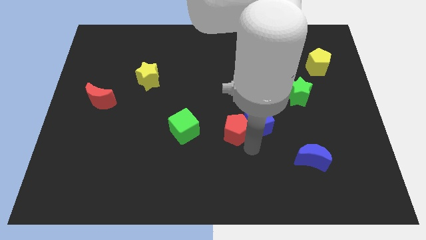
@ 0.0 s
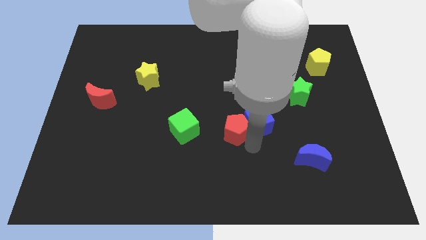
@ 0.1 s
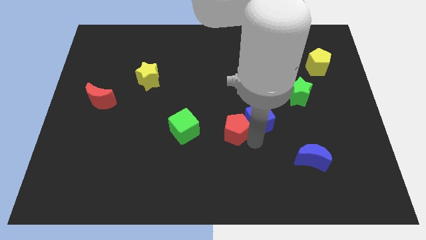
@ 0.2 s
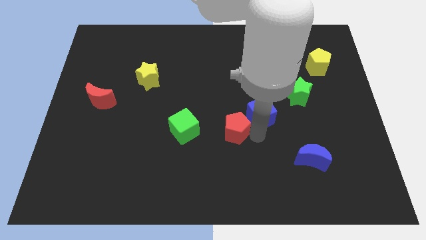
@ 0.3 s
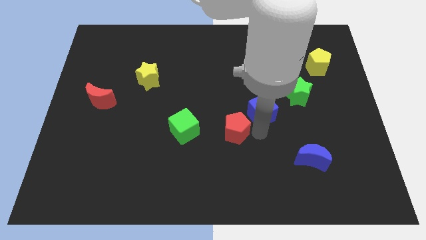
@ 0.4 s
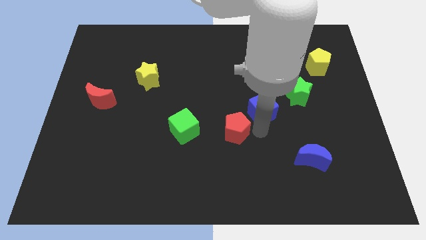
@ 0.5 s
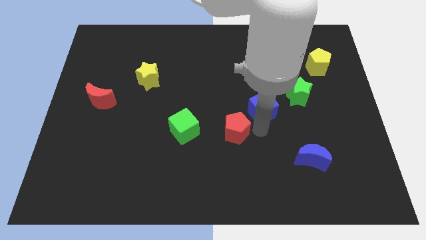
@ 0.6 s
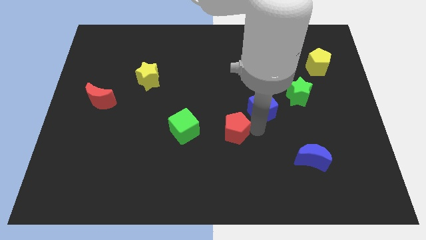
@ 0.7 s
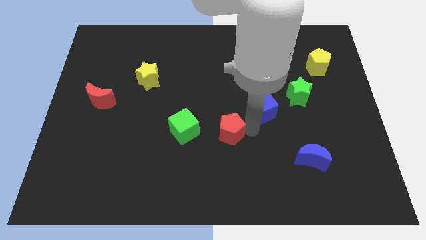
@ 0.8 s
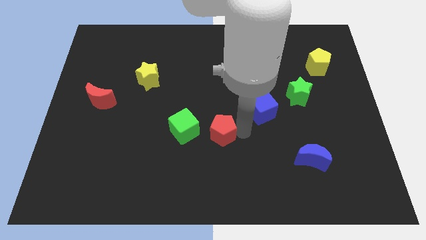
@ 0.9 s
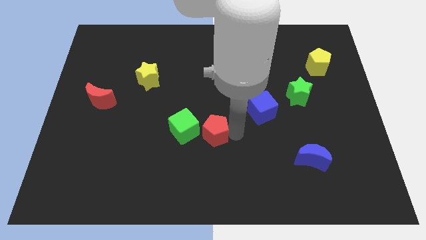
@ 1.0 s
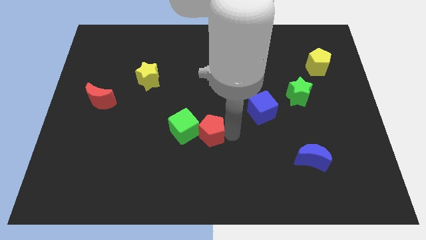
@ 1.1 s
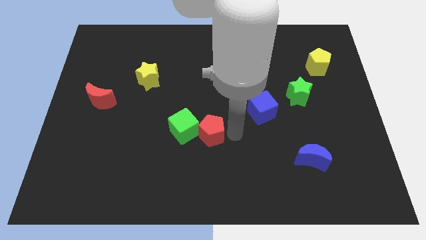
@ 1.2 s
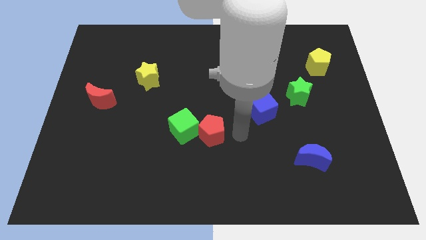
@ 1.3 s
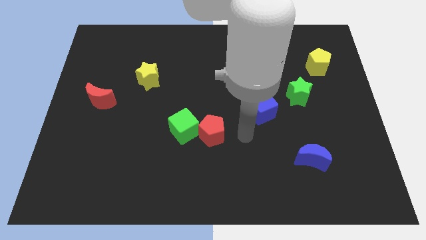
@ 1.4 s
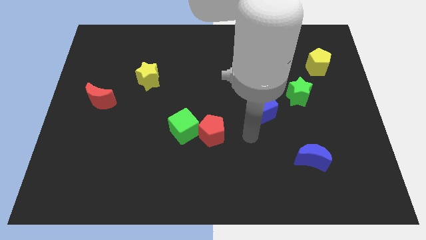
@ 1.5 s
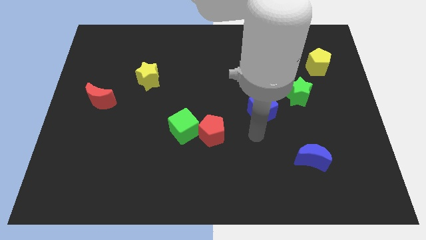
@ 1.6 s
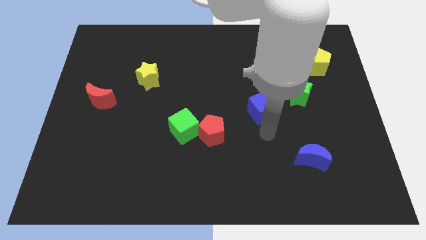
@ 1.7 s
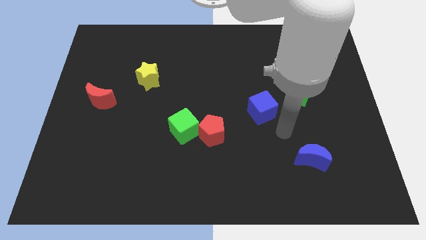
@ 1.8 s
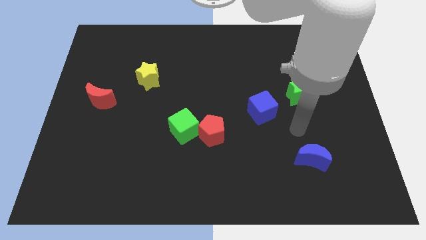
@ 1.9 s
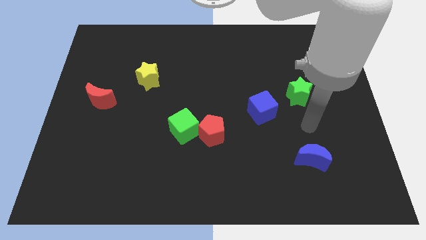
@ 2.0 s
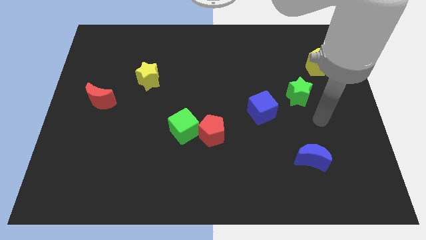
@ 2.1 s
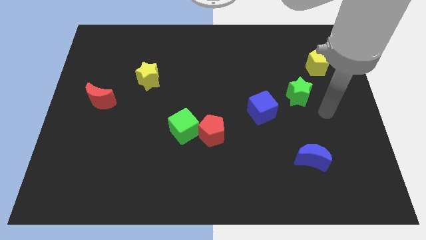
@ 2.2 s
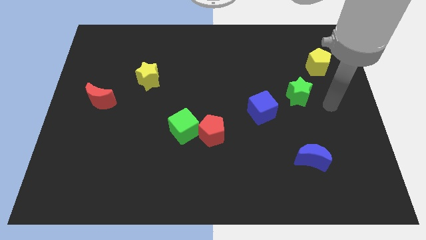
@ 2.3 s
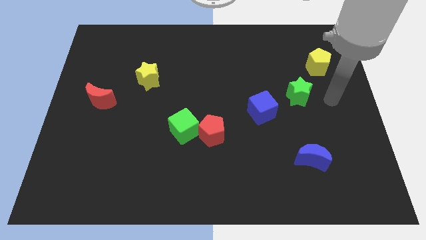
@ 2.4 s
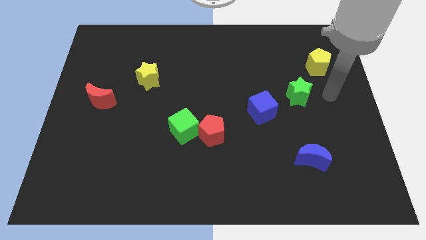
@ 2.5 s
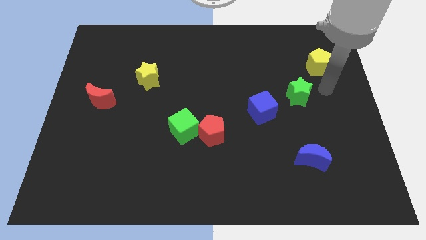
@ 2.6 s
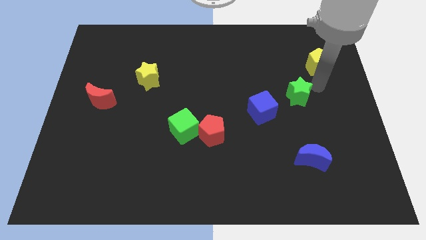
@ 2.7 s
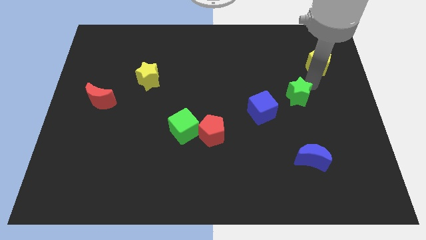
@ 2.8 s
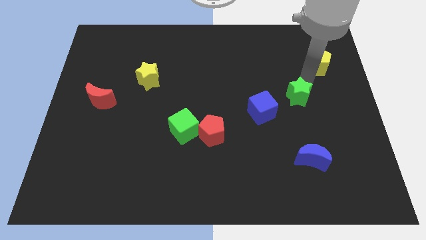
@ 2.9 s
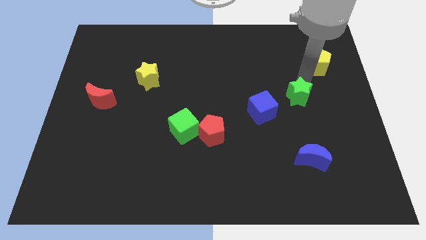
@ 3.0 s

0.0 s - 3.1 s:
move the red pentagon to touch the right side of the green cube

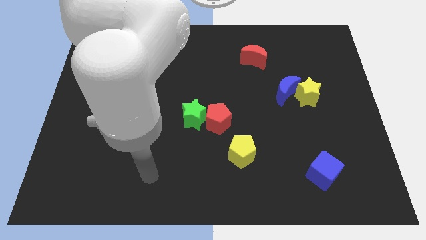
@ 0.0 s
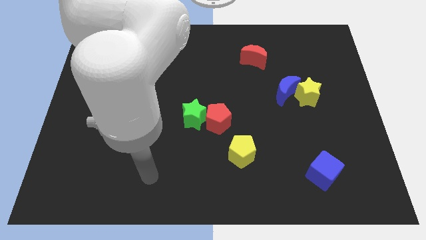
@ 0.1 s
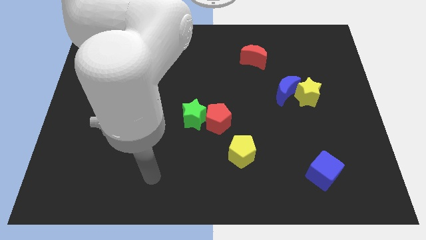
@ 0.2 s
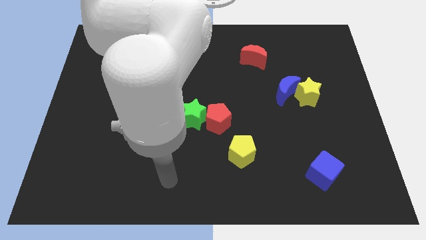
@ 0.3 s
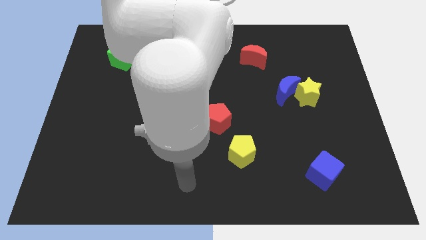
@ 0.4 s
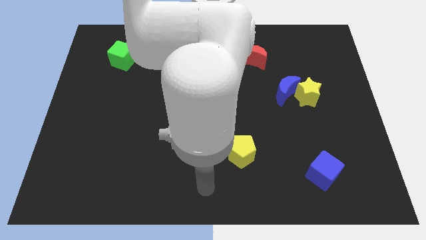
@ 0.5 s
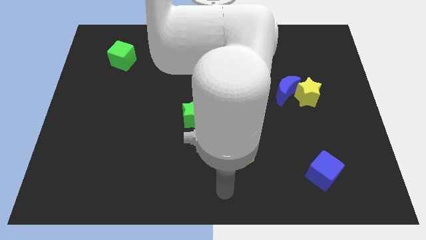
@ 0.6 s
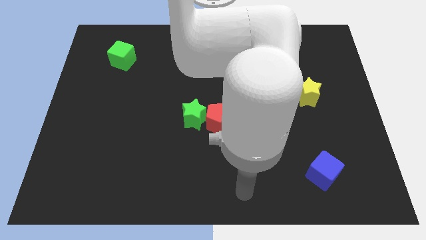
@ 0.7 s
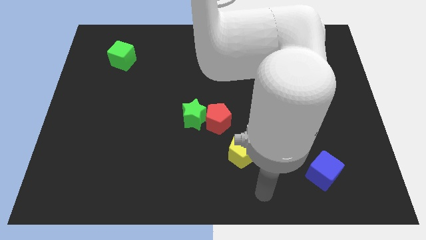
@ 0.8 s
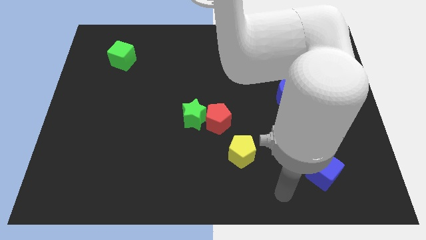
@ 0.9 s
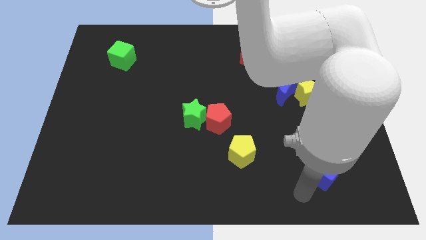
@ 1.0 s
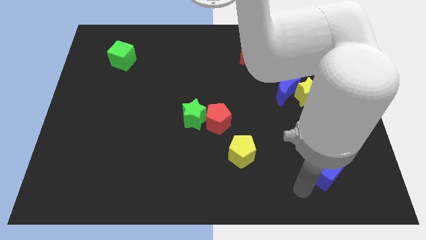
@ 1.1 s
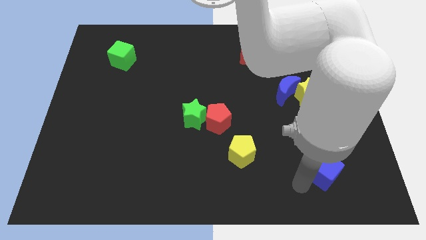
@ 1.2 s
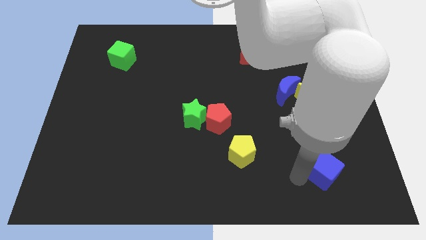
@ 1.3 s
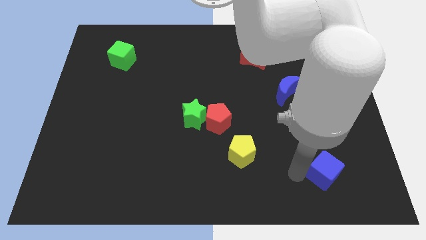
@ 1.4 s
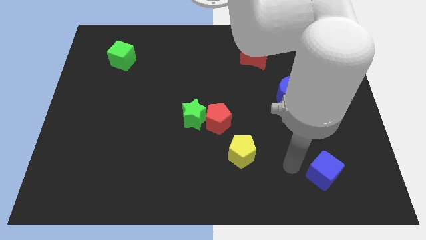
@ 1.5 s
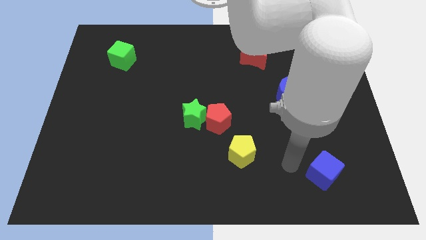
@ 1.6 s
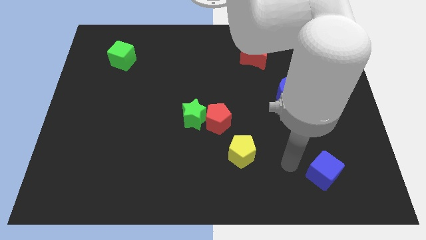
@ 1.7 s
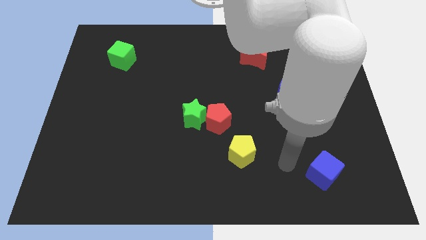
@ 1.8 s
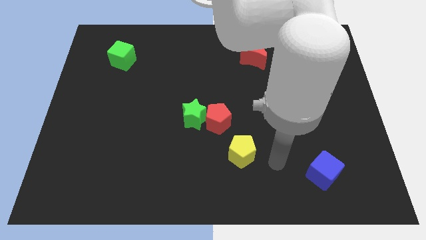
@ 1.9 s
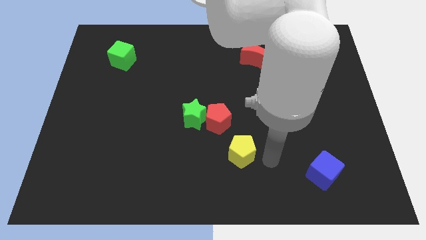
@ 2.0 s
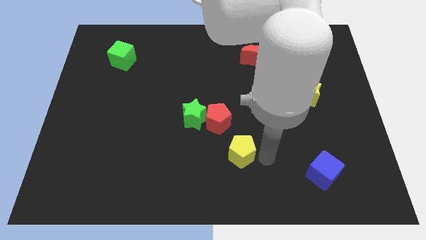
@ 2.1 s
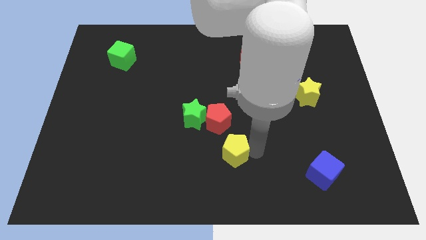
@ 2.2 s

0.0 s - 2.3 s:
tap the yellow pentagon

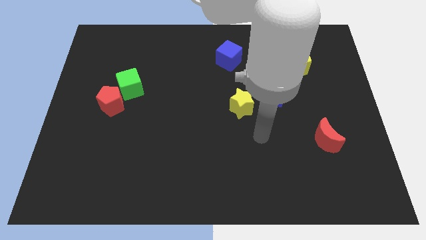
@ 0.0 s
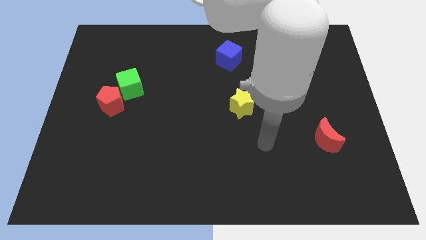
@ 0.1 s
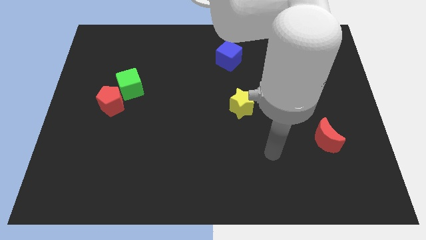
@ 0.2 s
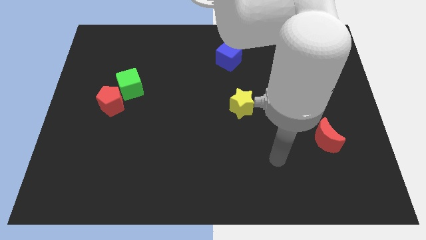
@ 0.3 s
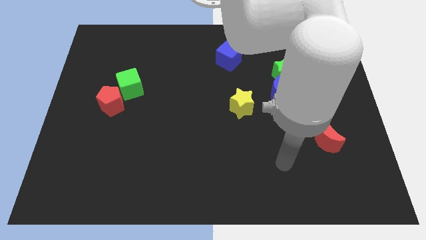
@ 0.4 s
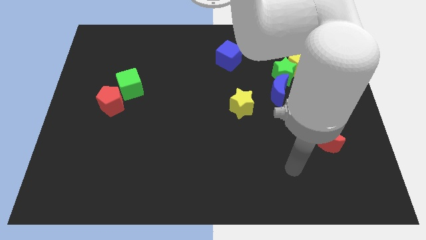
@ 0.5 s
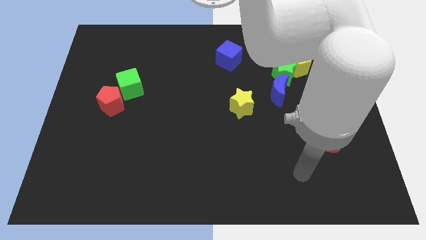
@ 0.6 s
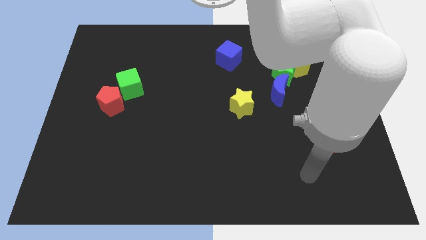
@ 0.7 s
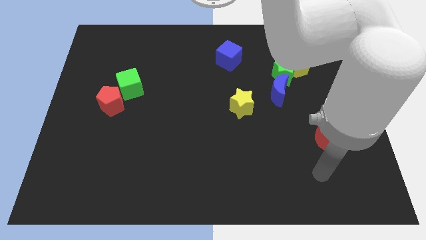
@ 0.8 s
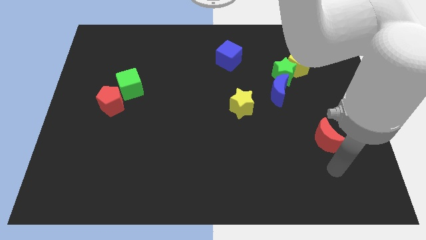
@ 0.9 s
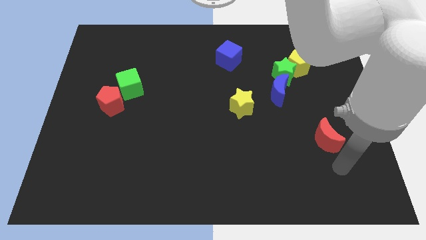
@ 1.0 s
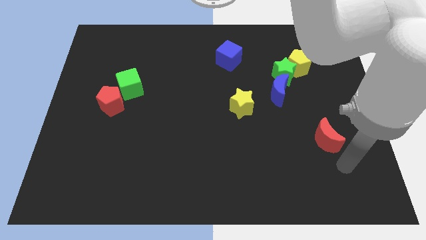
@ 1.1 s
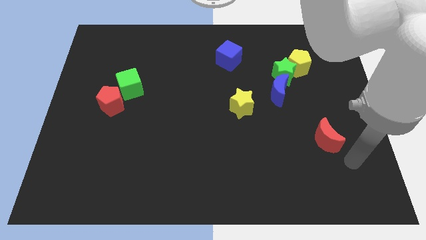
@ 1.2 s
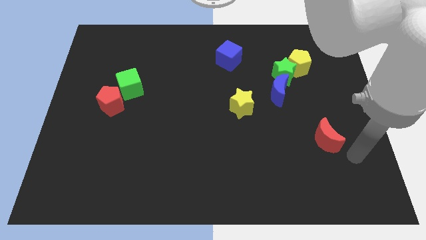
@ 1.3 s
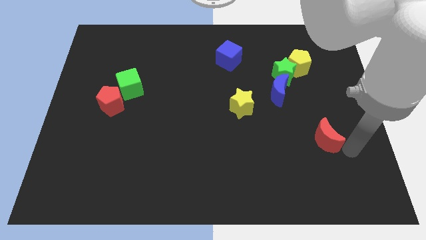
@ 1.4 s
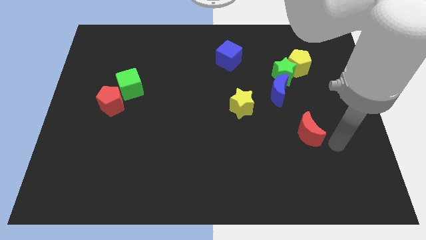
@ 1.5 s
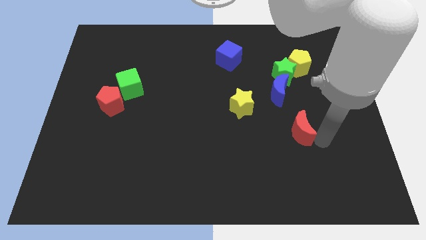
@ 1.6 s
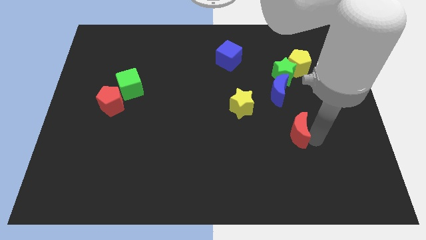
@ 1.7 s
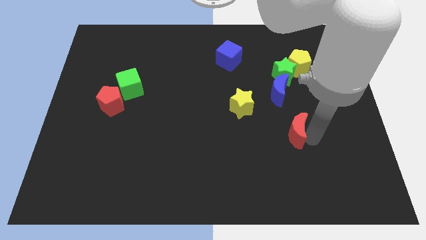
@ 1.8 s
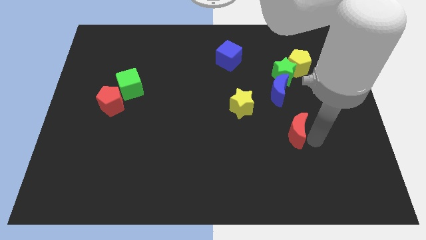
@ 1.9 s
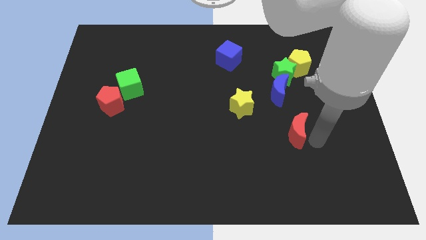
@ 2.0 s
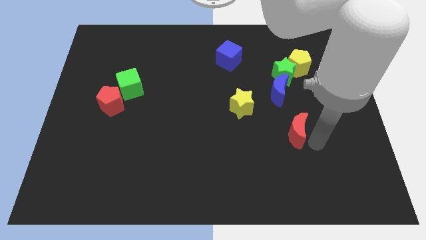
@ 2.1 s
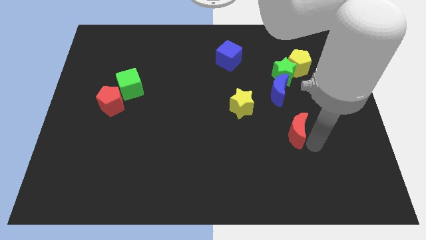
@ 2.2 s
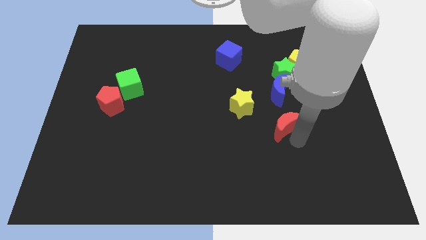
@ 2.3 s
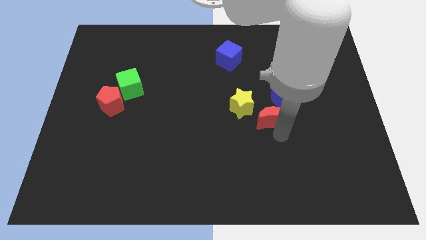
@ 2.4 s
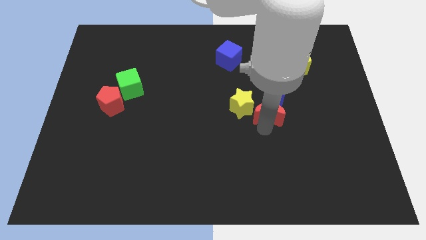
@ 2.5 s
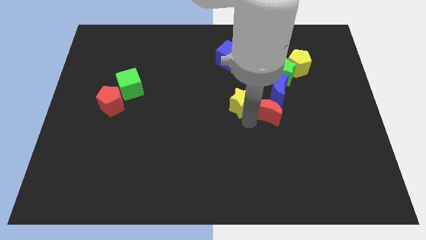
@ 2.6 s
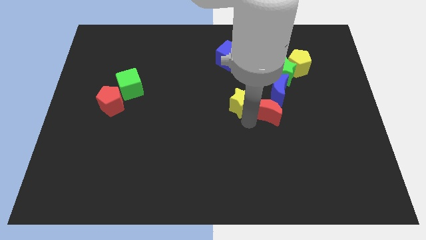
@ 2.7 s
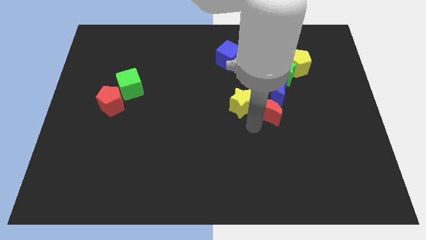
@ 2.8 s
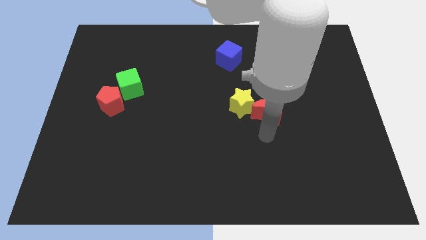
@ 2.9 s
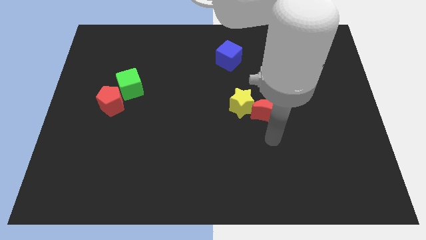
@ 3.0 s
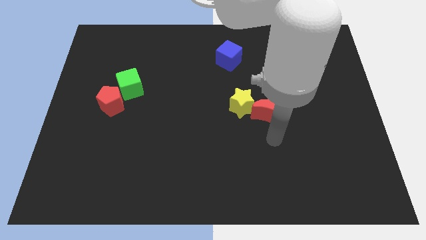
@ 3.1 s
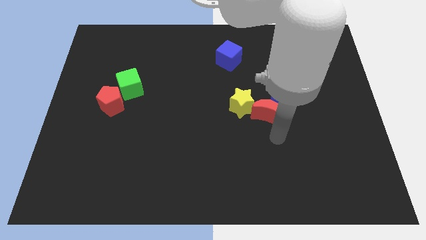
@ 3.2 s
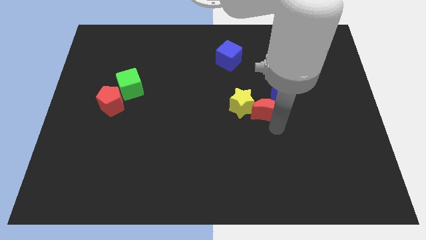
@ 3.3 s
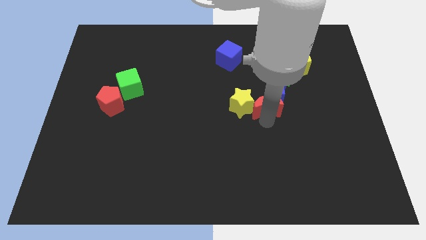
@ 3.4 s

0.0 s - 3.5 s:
move the red crescent to the bottom right of the yellow star
